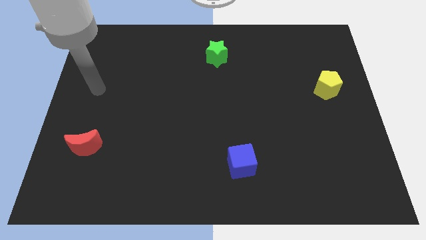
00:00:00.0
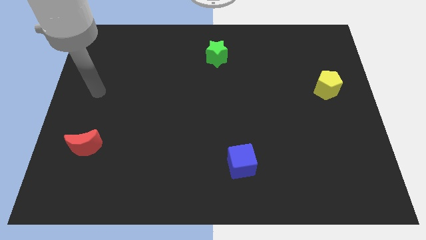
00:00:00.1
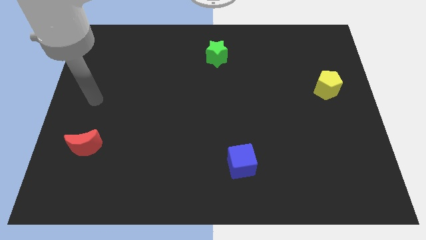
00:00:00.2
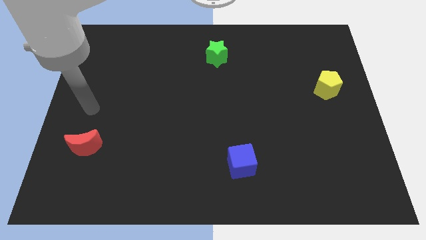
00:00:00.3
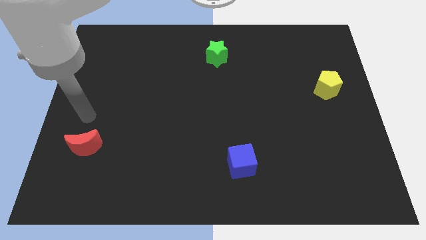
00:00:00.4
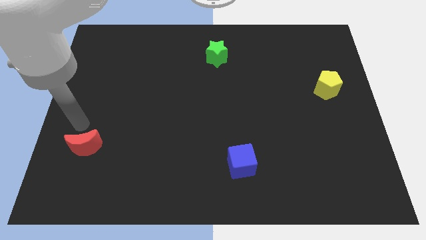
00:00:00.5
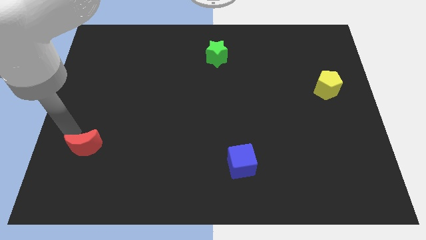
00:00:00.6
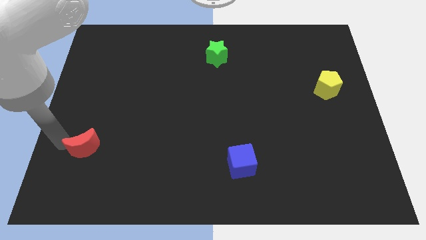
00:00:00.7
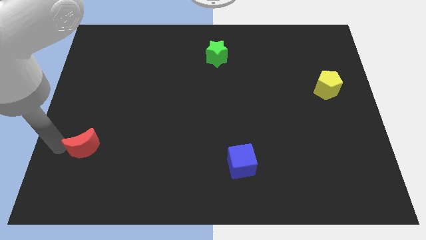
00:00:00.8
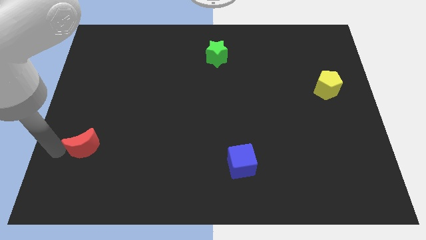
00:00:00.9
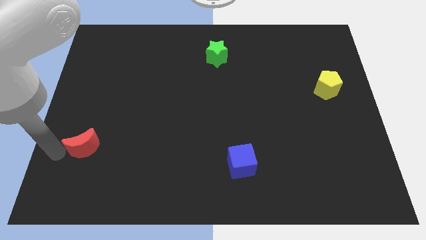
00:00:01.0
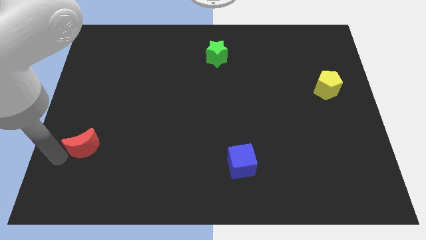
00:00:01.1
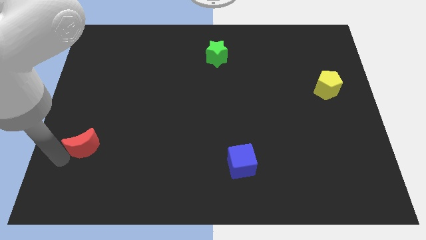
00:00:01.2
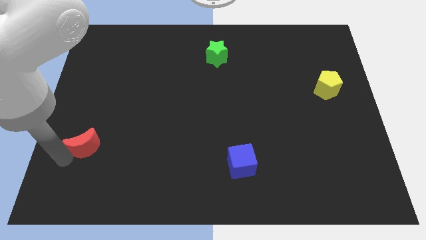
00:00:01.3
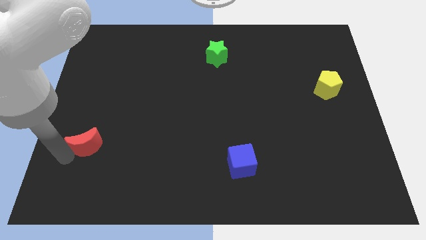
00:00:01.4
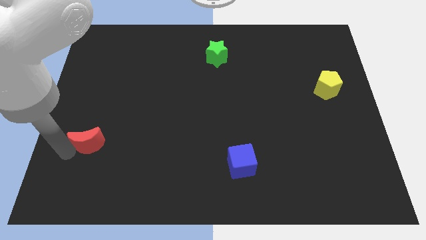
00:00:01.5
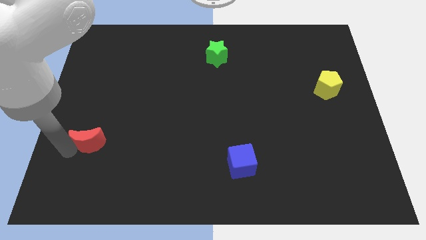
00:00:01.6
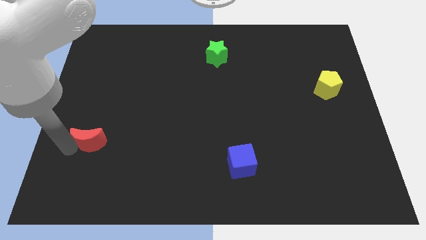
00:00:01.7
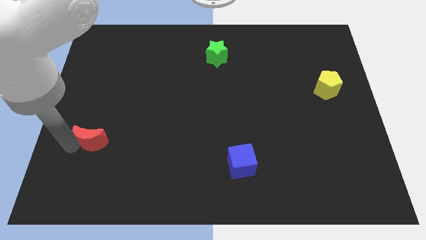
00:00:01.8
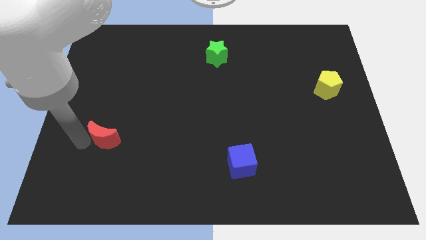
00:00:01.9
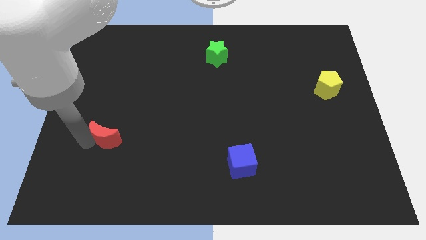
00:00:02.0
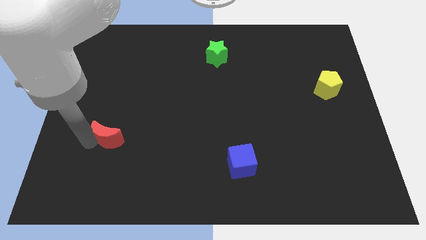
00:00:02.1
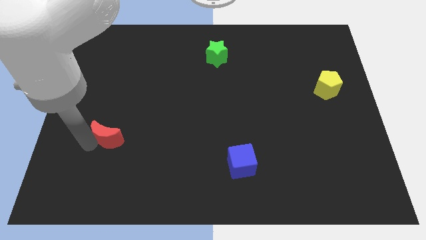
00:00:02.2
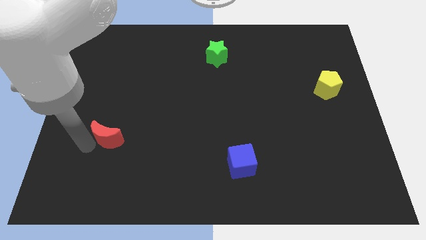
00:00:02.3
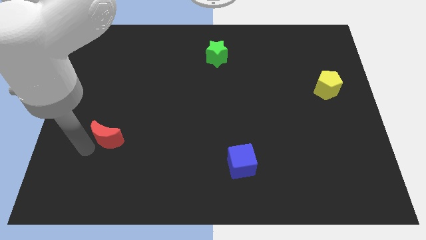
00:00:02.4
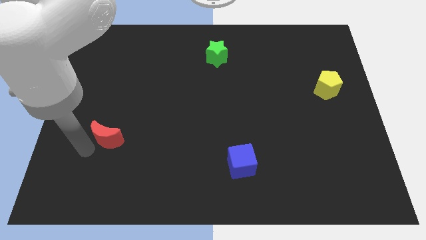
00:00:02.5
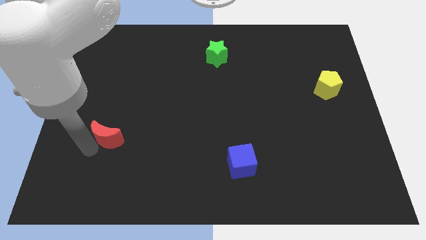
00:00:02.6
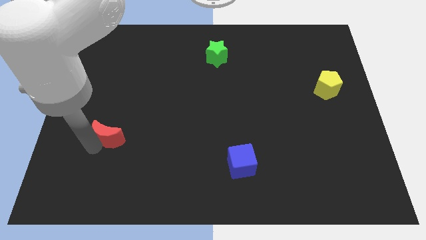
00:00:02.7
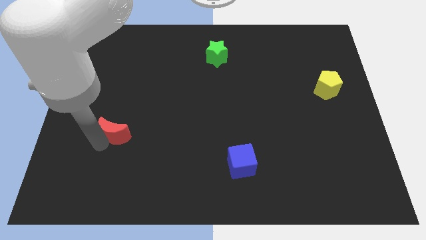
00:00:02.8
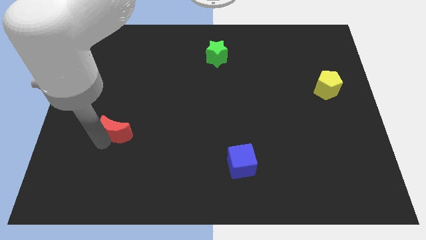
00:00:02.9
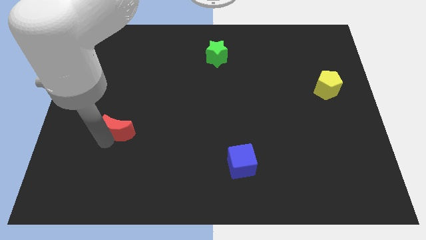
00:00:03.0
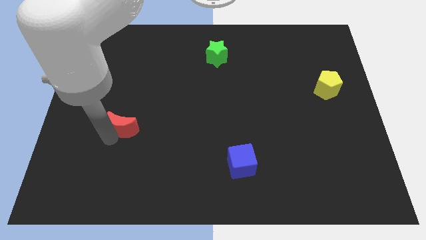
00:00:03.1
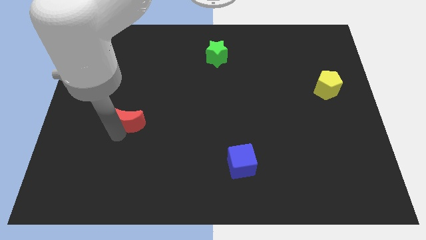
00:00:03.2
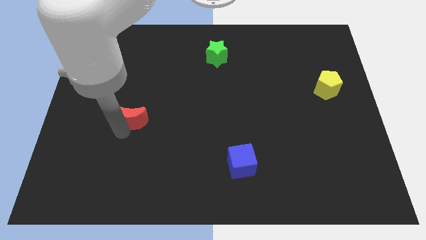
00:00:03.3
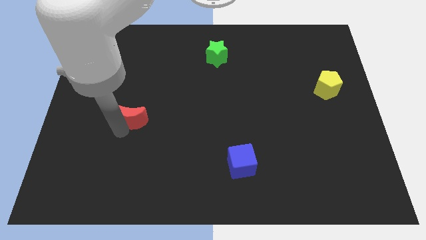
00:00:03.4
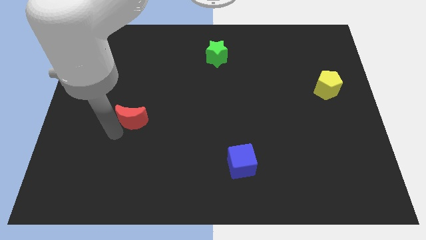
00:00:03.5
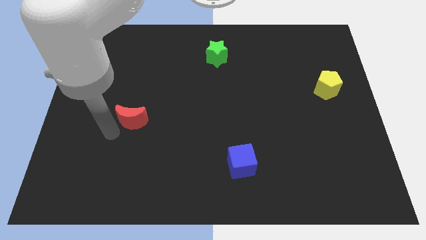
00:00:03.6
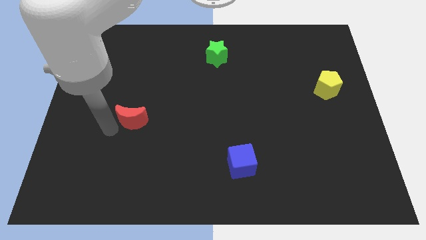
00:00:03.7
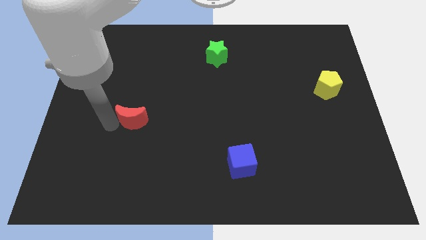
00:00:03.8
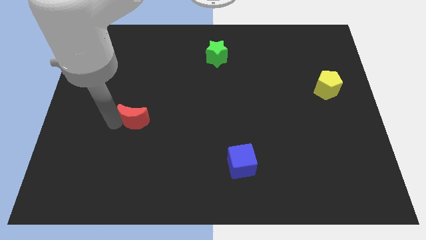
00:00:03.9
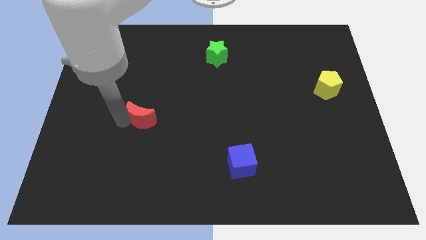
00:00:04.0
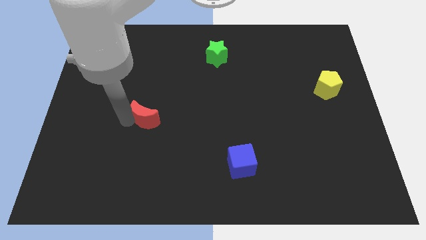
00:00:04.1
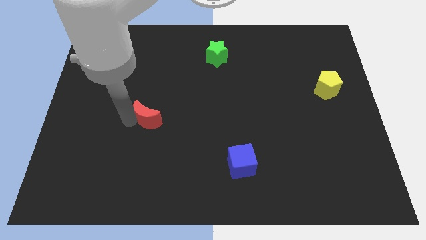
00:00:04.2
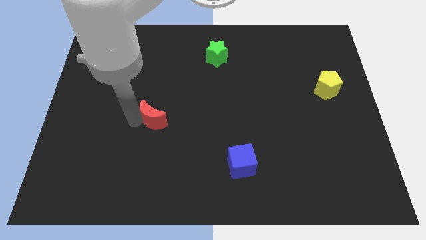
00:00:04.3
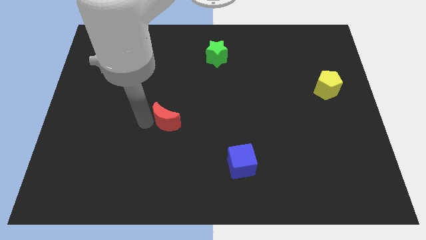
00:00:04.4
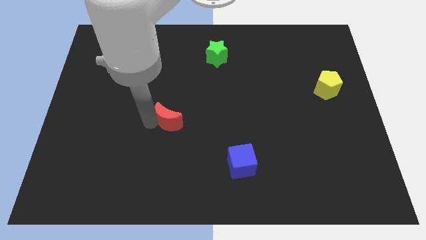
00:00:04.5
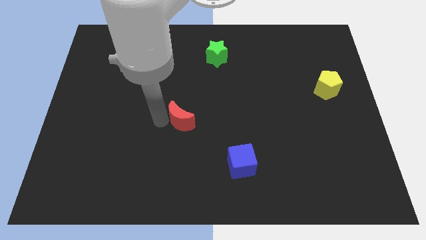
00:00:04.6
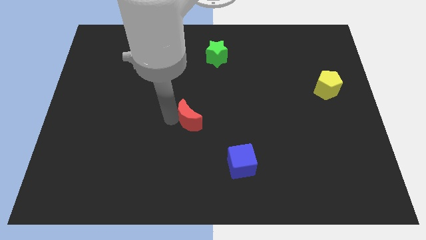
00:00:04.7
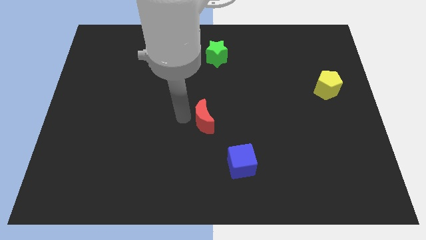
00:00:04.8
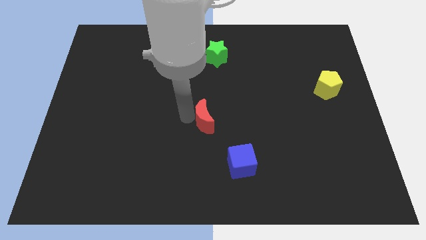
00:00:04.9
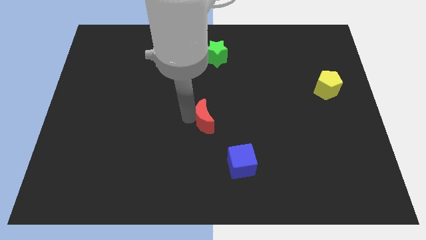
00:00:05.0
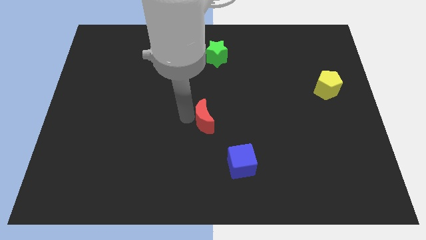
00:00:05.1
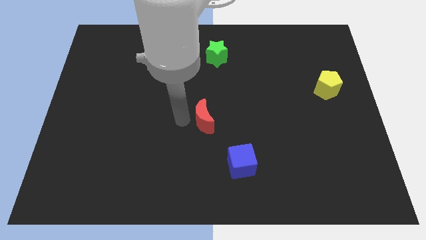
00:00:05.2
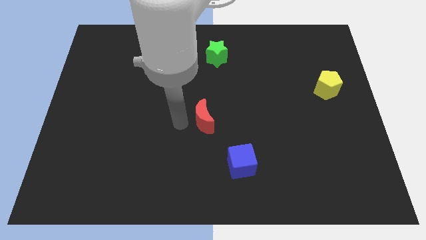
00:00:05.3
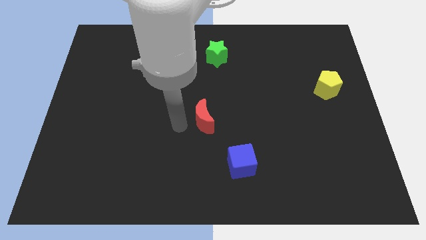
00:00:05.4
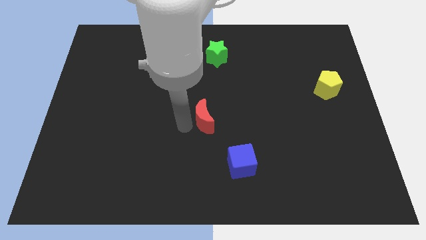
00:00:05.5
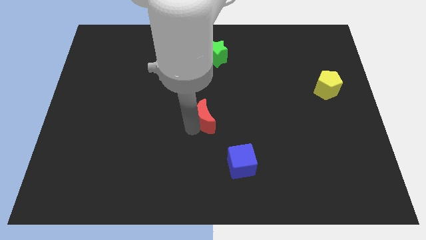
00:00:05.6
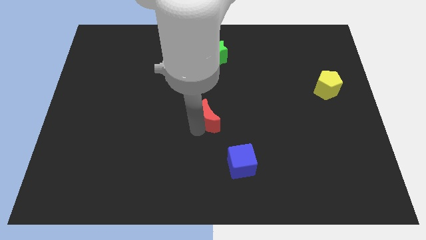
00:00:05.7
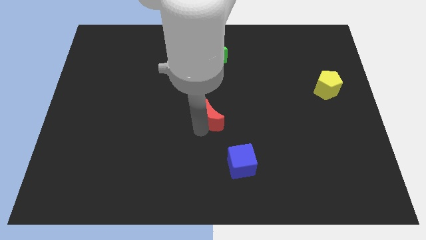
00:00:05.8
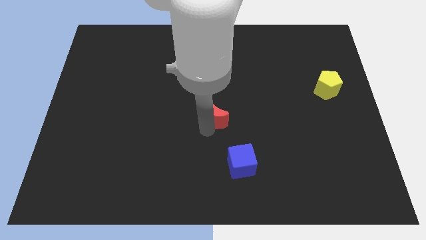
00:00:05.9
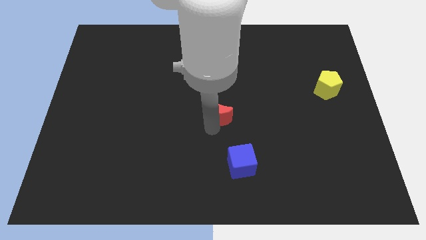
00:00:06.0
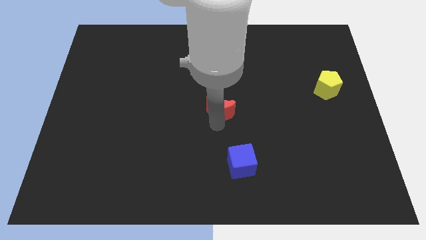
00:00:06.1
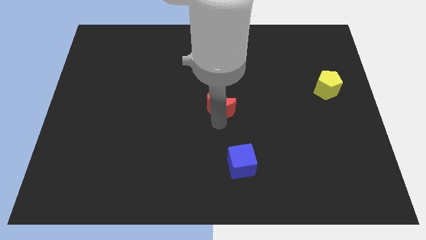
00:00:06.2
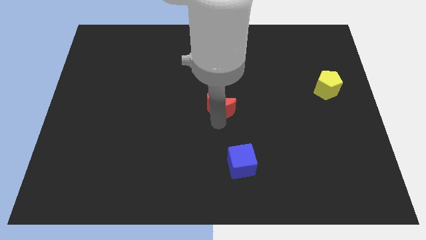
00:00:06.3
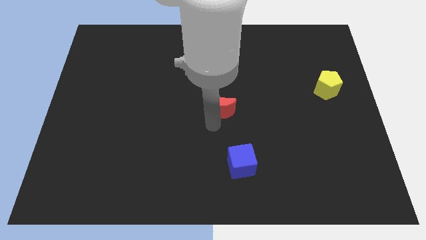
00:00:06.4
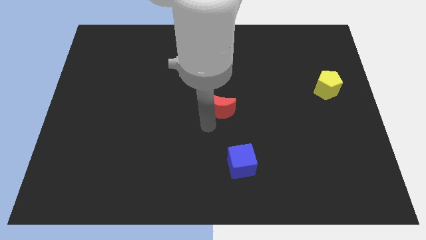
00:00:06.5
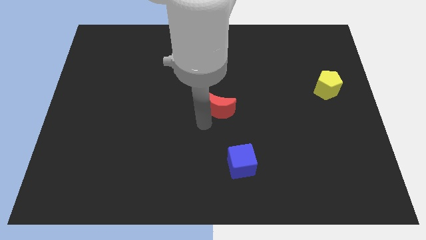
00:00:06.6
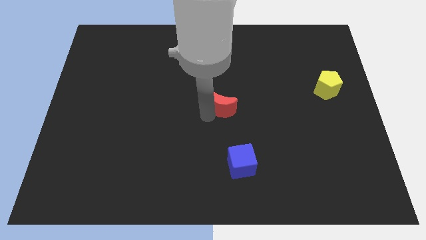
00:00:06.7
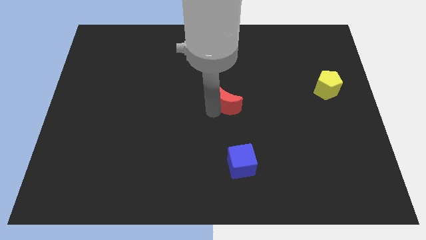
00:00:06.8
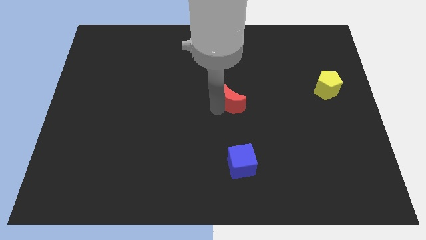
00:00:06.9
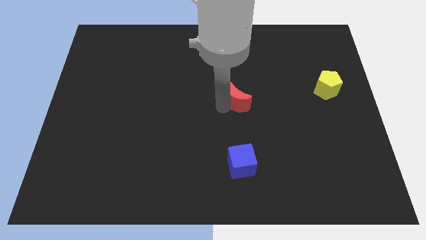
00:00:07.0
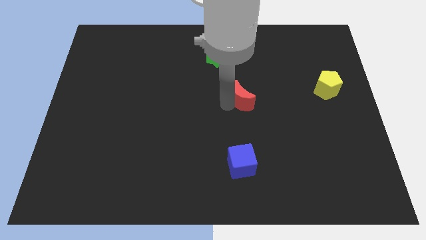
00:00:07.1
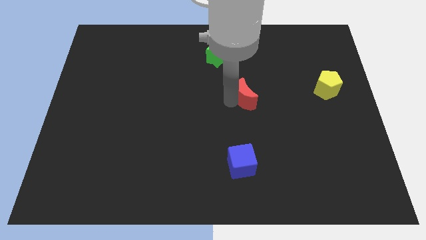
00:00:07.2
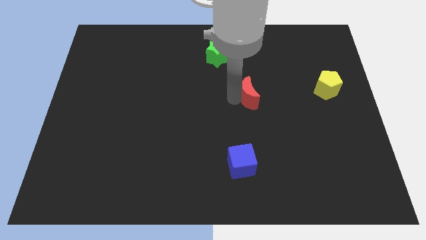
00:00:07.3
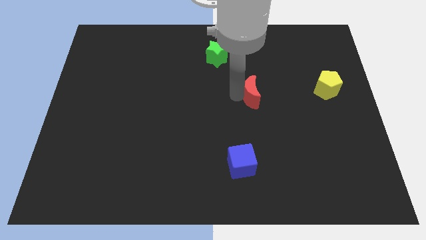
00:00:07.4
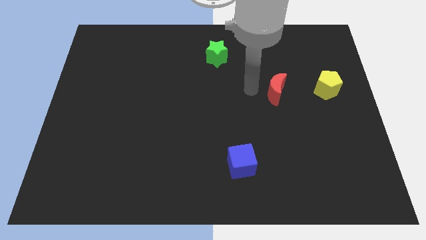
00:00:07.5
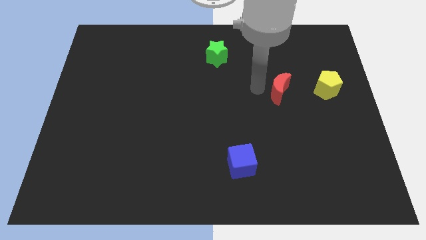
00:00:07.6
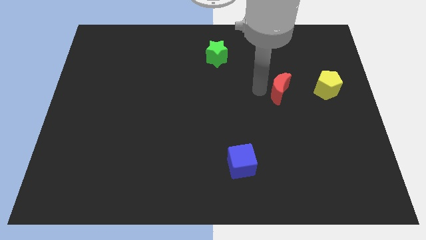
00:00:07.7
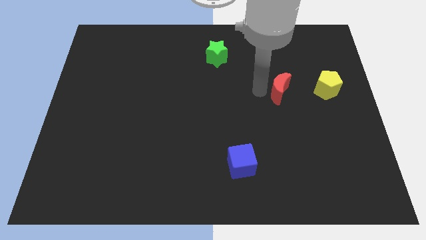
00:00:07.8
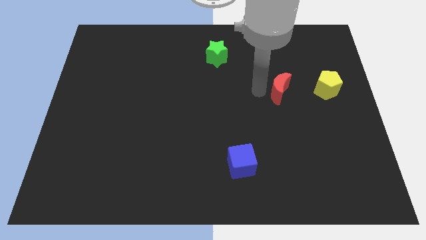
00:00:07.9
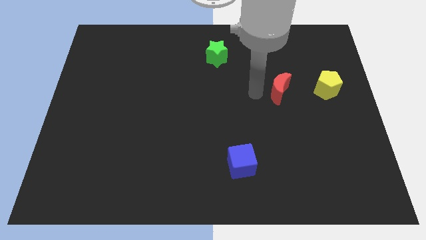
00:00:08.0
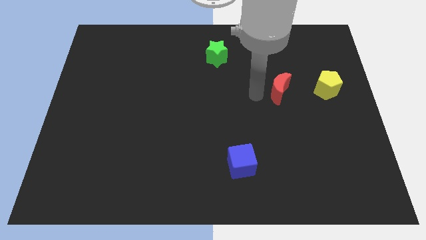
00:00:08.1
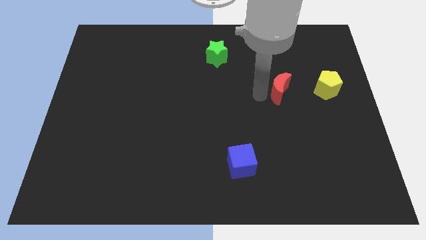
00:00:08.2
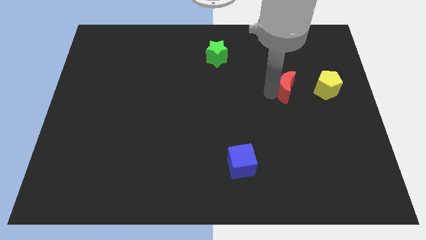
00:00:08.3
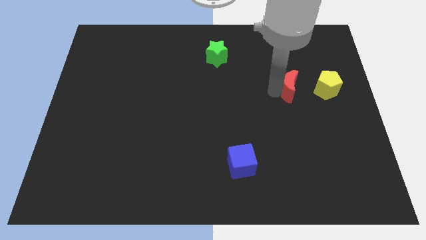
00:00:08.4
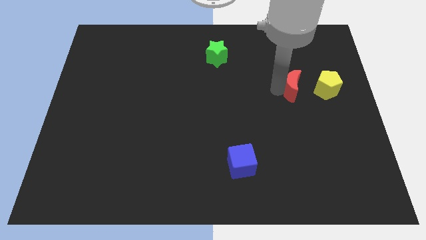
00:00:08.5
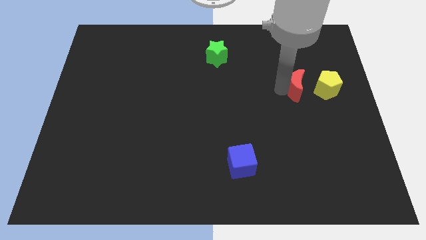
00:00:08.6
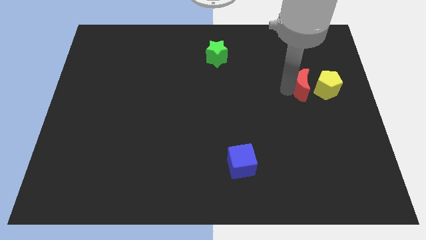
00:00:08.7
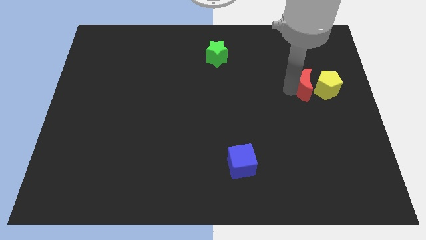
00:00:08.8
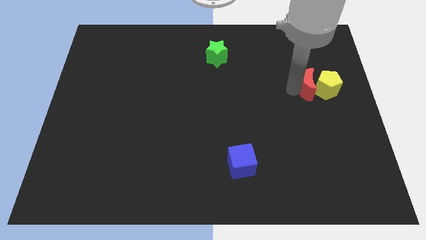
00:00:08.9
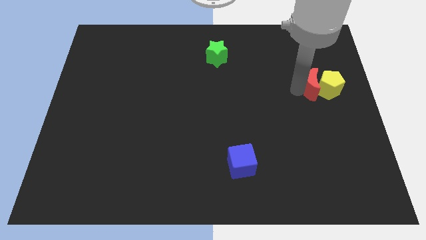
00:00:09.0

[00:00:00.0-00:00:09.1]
move the red block towards the yellow block
